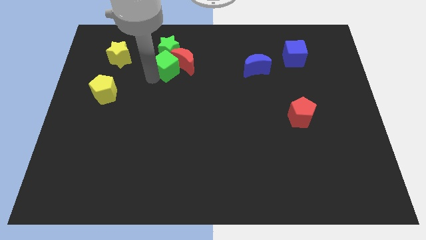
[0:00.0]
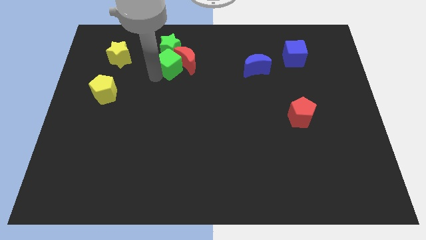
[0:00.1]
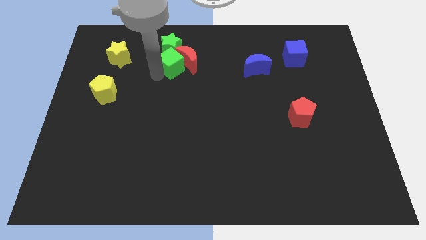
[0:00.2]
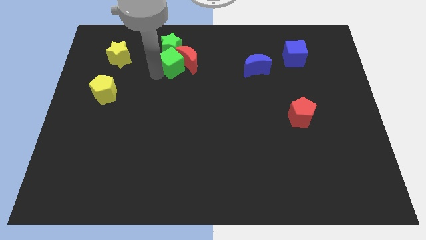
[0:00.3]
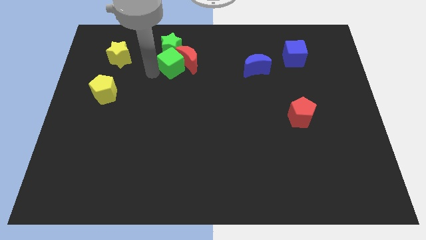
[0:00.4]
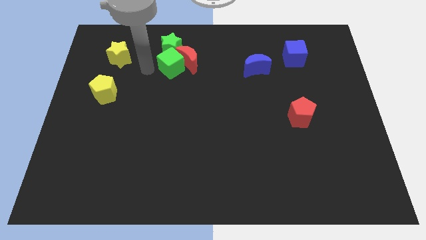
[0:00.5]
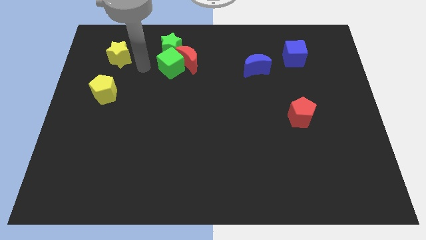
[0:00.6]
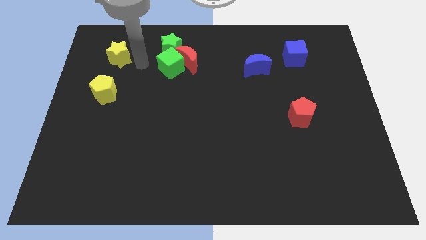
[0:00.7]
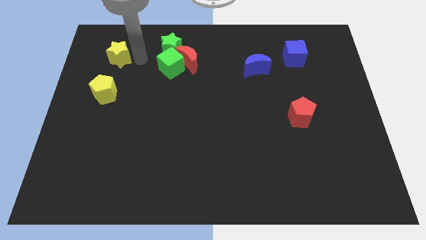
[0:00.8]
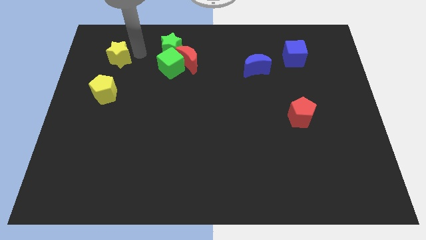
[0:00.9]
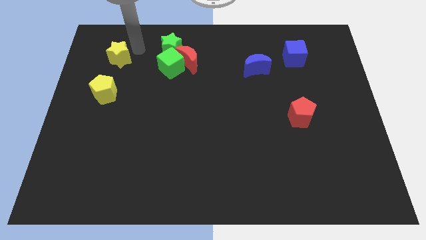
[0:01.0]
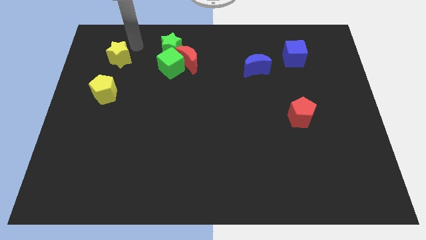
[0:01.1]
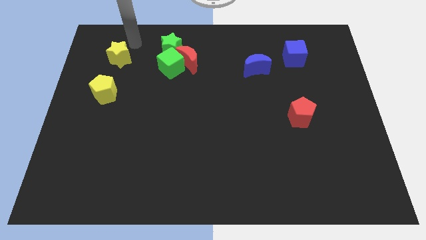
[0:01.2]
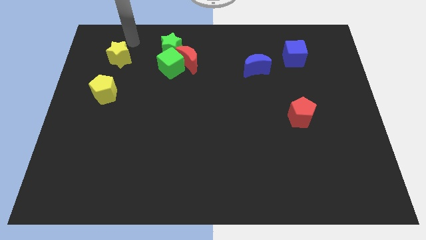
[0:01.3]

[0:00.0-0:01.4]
move the arm to the yellow star

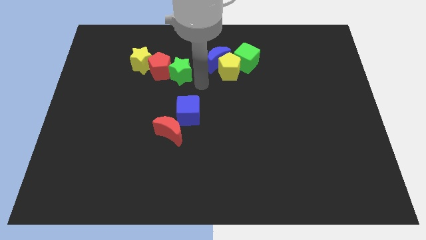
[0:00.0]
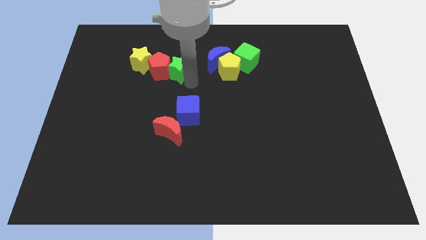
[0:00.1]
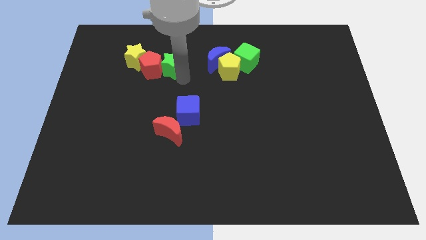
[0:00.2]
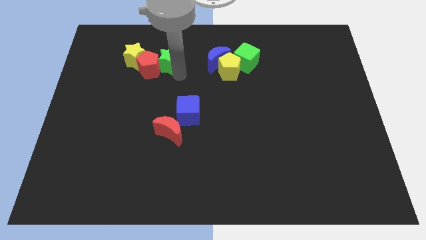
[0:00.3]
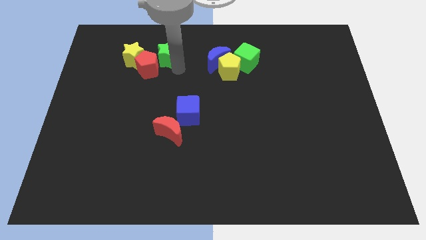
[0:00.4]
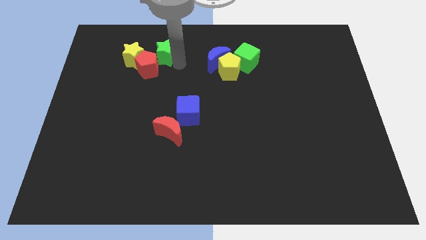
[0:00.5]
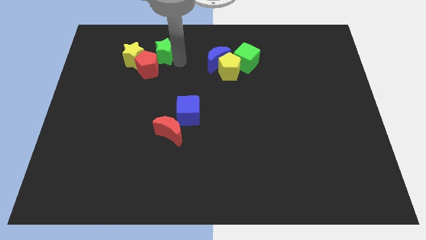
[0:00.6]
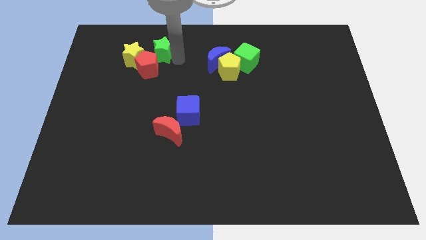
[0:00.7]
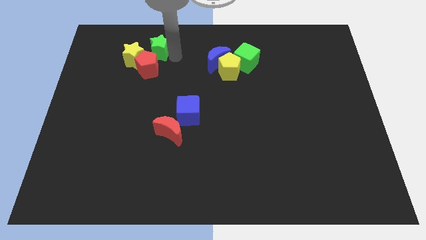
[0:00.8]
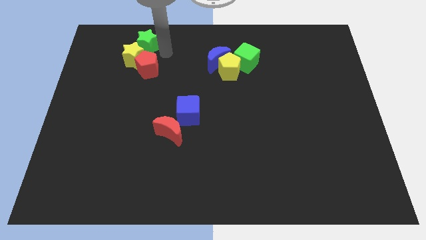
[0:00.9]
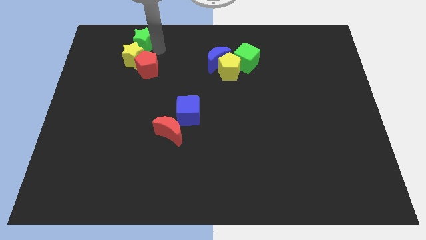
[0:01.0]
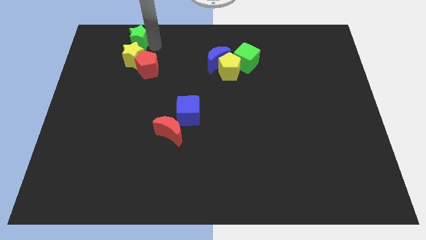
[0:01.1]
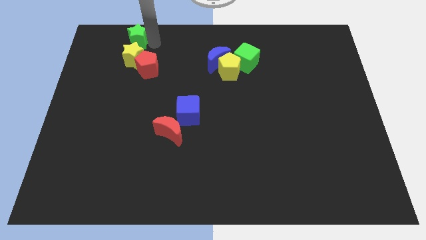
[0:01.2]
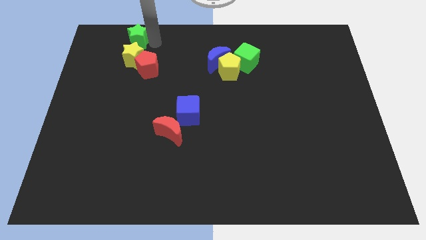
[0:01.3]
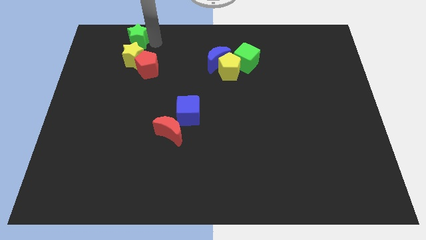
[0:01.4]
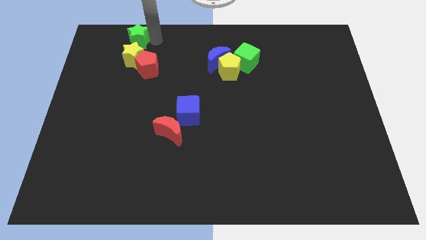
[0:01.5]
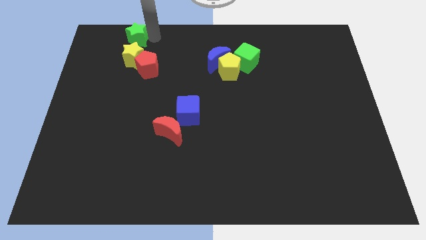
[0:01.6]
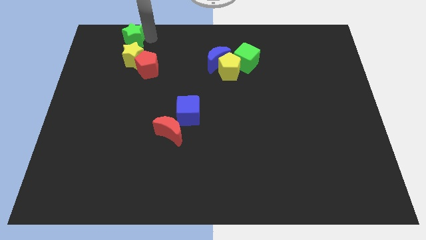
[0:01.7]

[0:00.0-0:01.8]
push the green star to the top of the yellow star

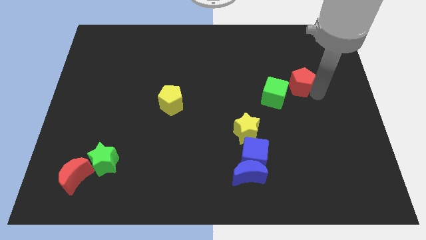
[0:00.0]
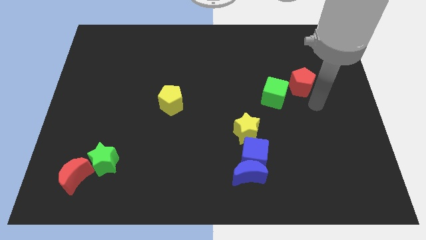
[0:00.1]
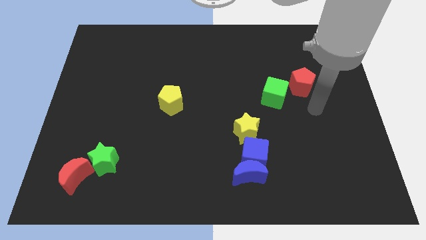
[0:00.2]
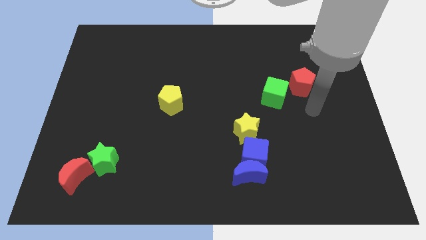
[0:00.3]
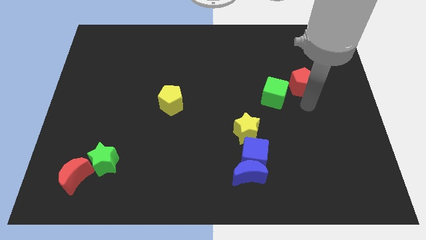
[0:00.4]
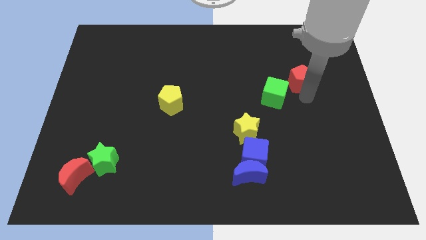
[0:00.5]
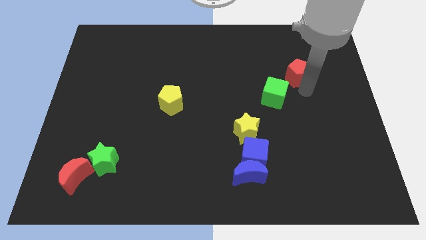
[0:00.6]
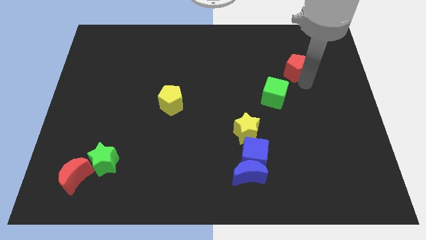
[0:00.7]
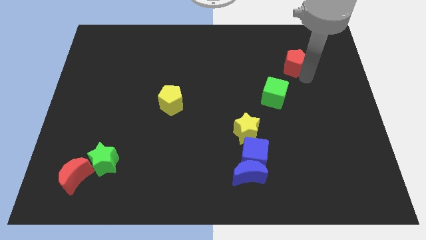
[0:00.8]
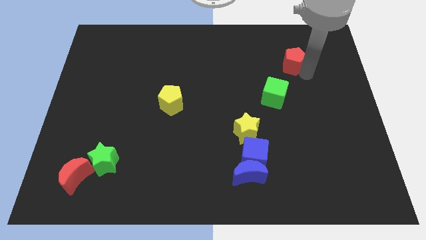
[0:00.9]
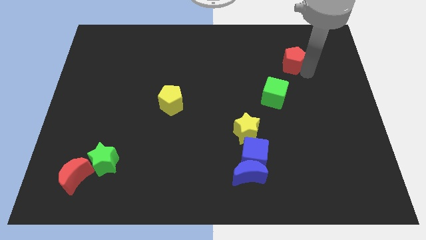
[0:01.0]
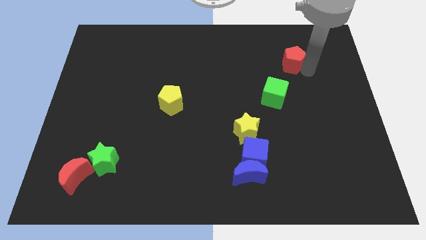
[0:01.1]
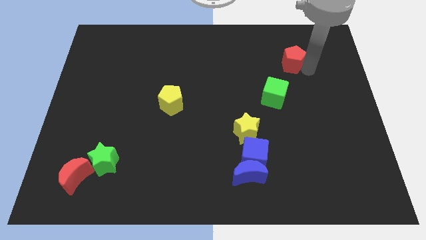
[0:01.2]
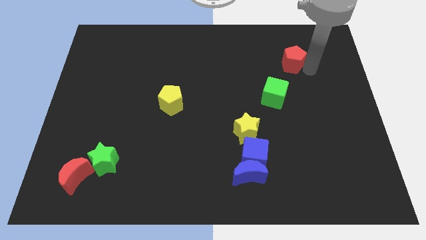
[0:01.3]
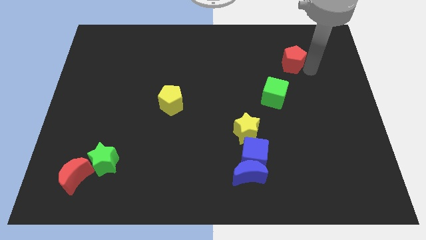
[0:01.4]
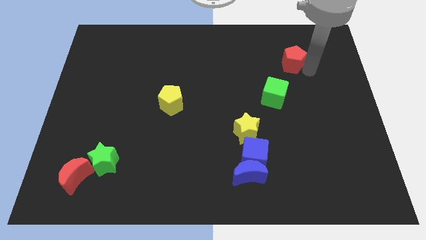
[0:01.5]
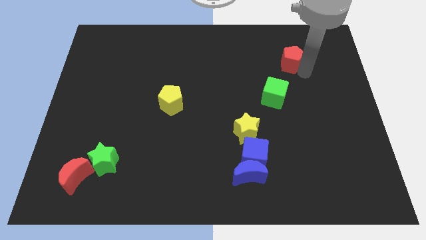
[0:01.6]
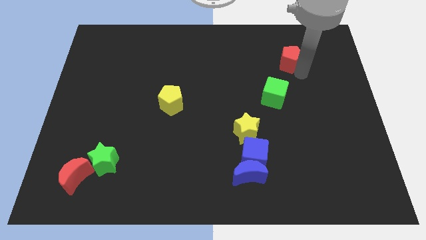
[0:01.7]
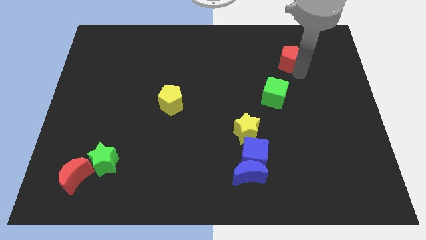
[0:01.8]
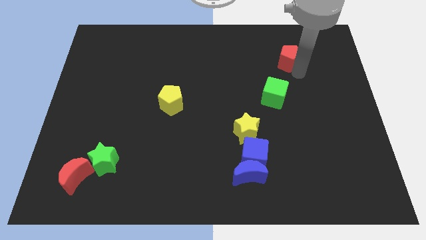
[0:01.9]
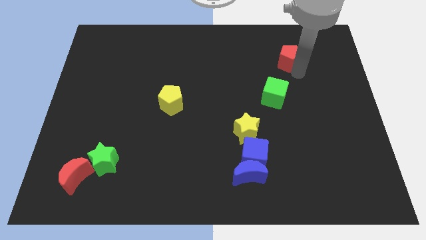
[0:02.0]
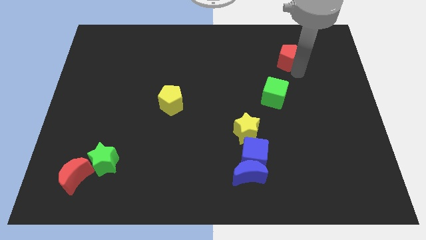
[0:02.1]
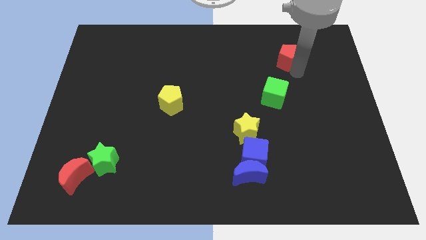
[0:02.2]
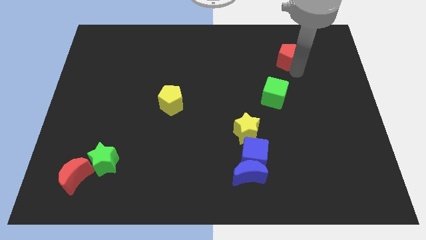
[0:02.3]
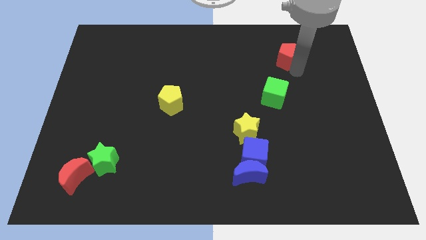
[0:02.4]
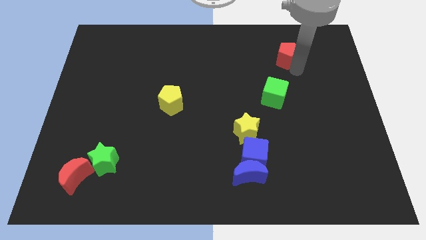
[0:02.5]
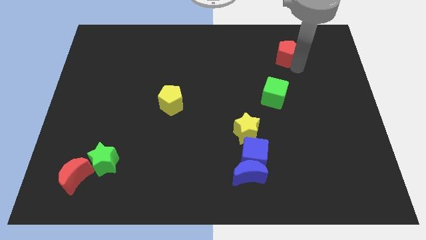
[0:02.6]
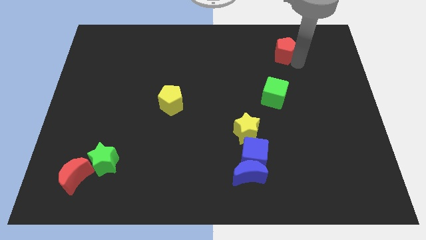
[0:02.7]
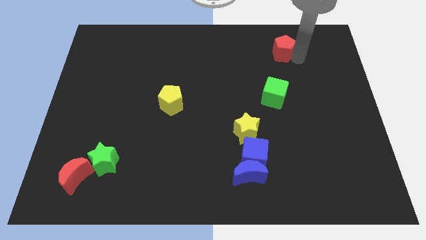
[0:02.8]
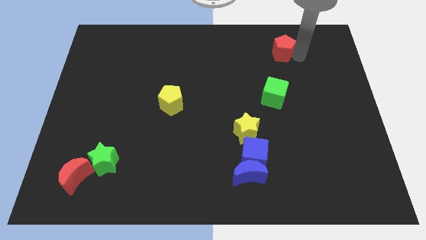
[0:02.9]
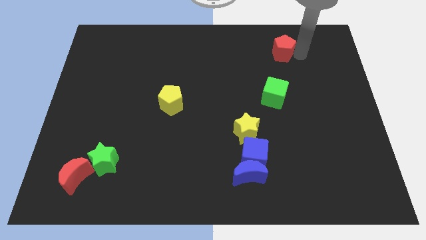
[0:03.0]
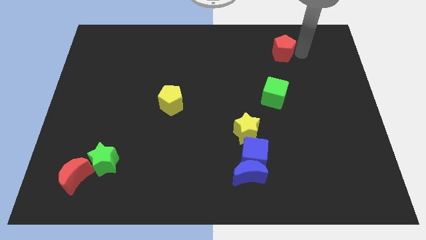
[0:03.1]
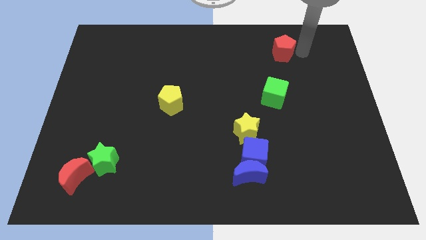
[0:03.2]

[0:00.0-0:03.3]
place the red pentagon above the green cube

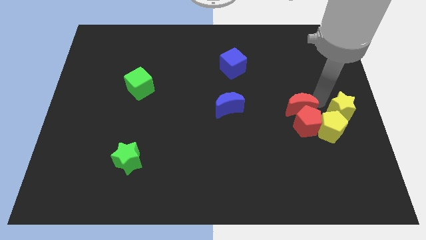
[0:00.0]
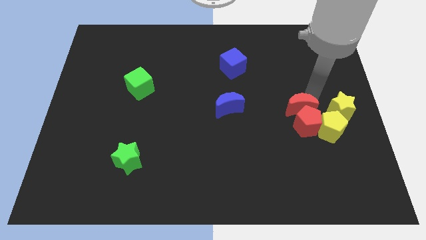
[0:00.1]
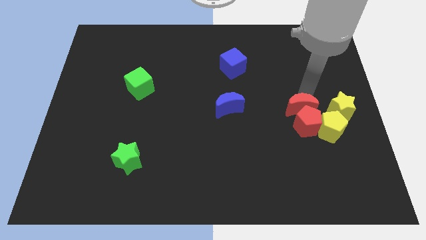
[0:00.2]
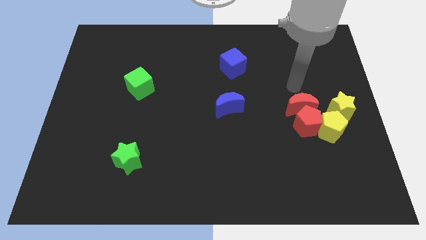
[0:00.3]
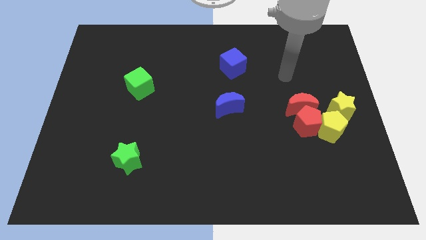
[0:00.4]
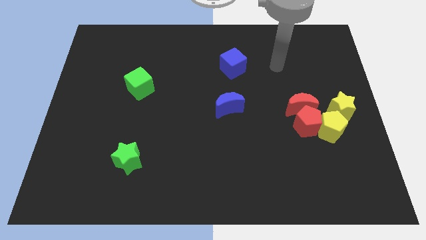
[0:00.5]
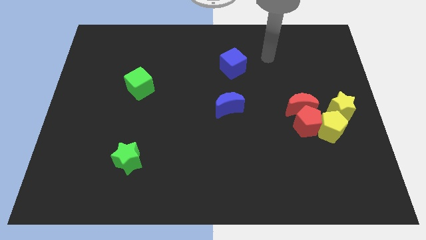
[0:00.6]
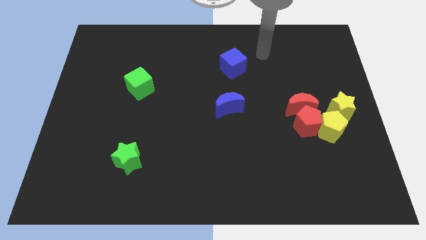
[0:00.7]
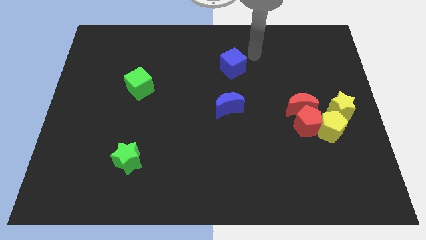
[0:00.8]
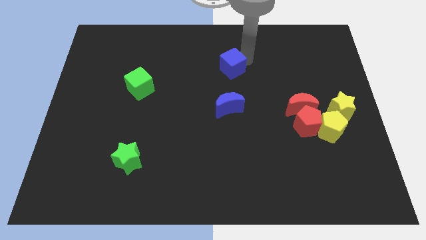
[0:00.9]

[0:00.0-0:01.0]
place your arm to the right side of the blue cube

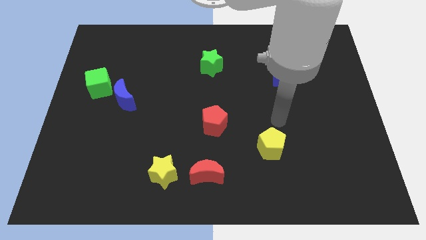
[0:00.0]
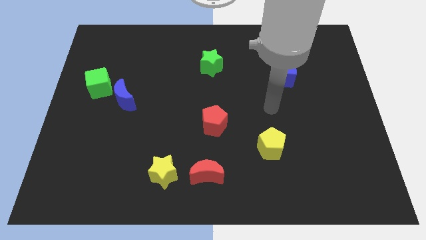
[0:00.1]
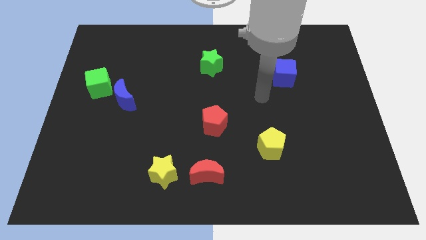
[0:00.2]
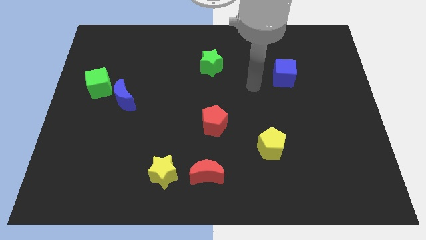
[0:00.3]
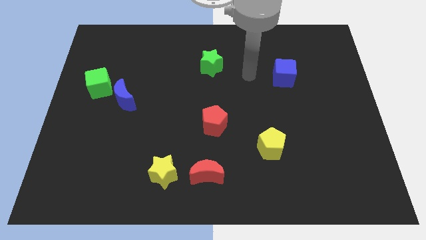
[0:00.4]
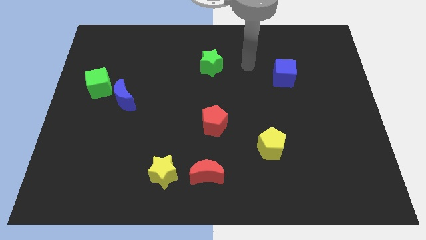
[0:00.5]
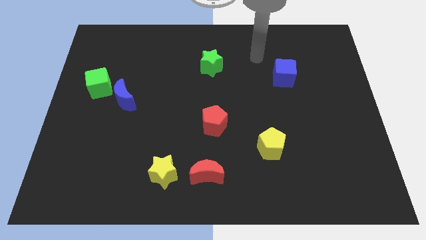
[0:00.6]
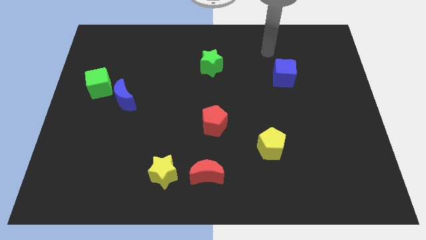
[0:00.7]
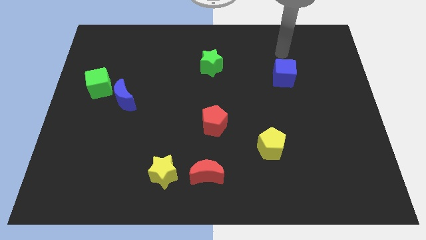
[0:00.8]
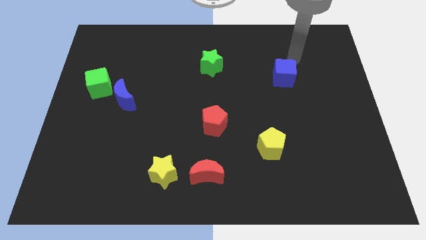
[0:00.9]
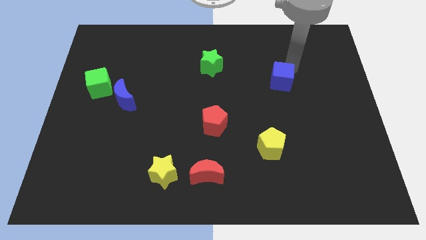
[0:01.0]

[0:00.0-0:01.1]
tap the blue cube

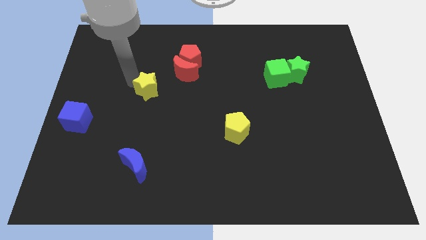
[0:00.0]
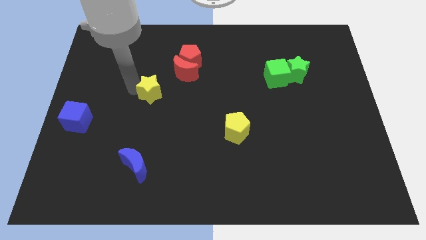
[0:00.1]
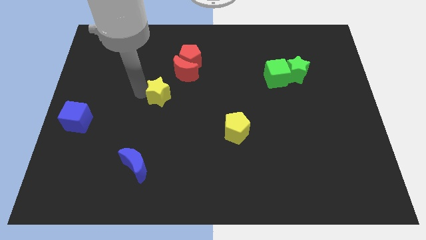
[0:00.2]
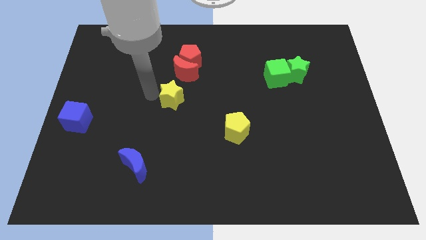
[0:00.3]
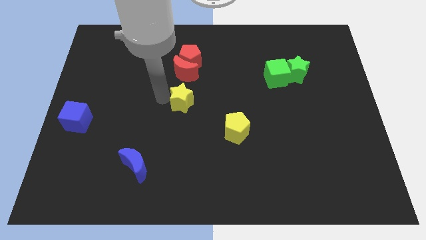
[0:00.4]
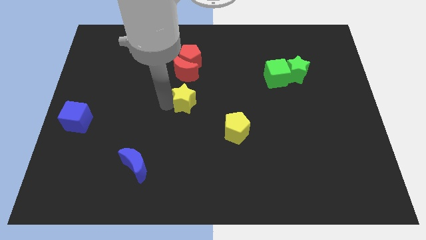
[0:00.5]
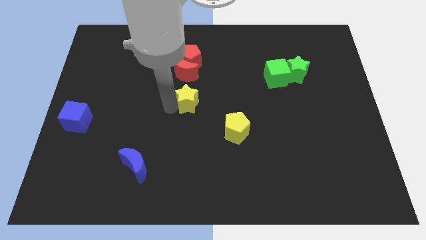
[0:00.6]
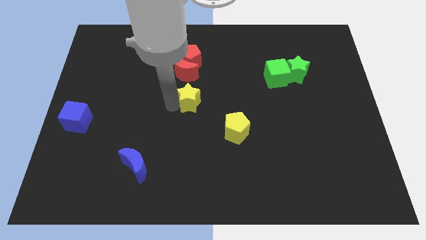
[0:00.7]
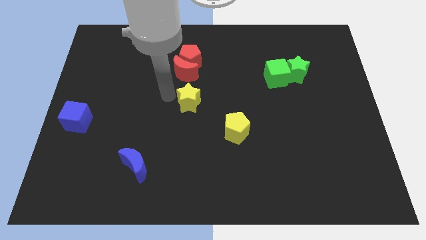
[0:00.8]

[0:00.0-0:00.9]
place the yellow star below the red crescent
